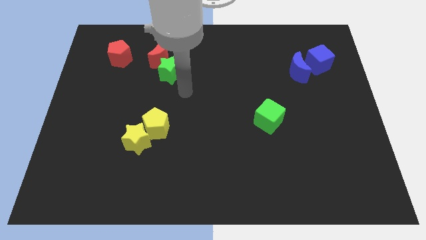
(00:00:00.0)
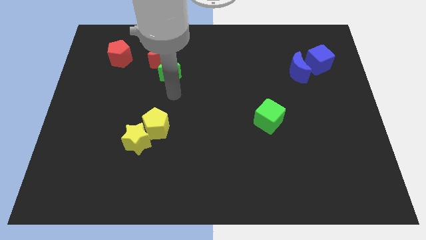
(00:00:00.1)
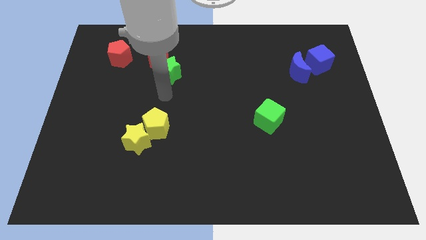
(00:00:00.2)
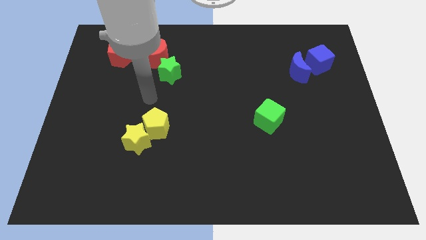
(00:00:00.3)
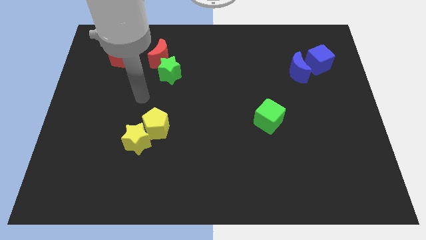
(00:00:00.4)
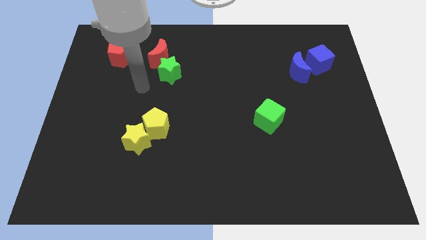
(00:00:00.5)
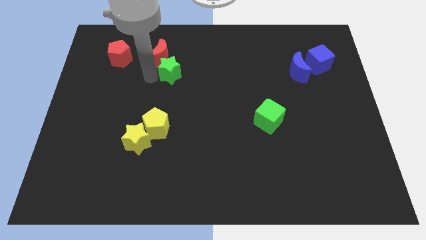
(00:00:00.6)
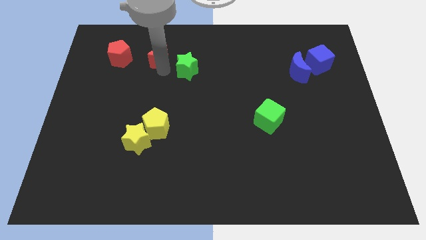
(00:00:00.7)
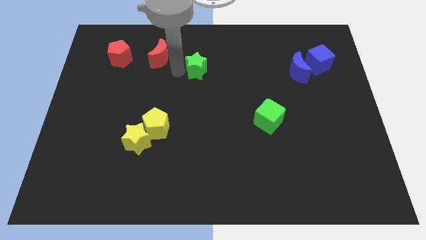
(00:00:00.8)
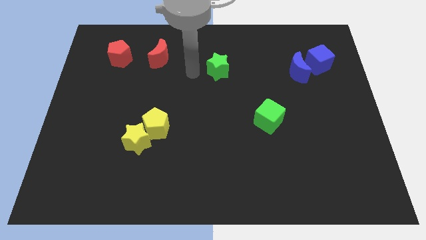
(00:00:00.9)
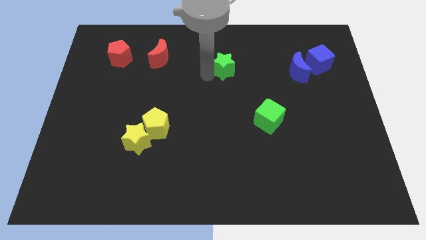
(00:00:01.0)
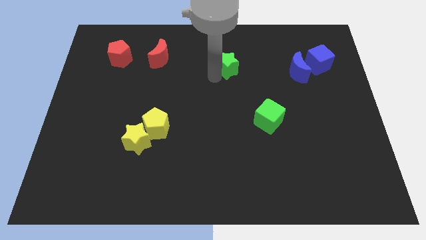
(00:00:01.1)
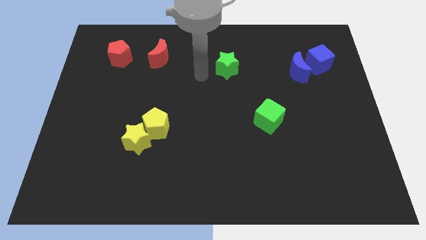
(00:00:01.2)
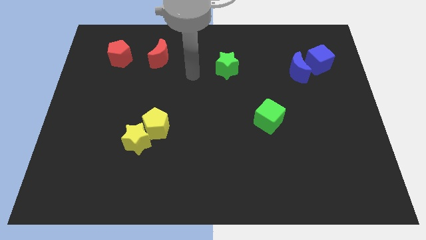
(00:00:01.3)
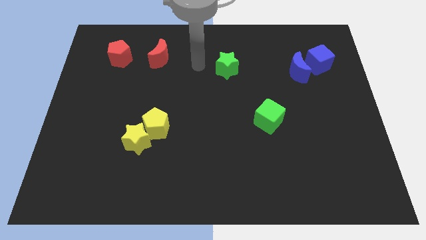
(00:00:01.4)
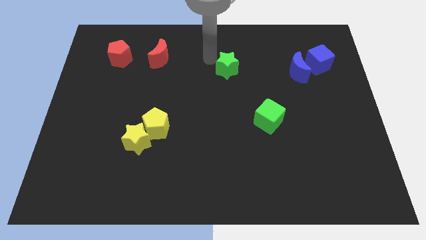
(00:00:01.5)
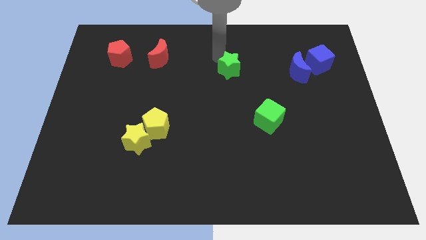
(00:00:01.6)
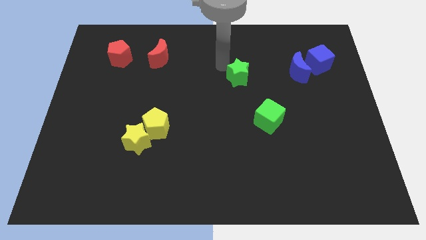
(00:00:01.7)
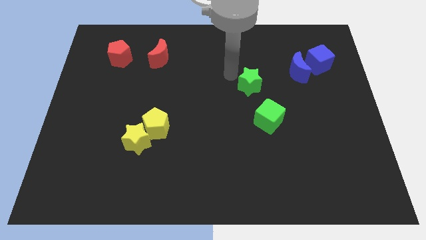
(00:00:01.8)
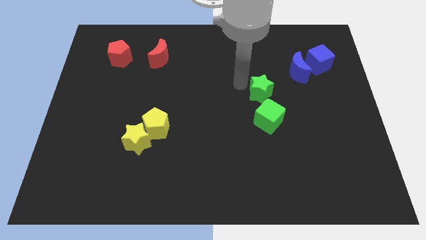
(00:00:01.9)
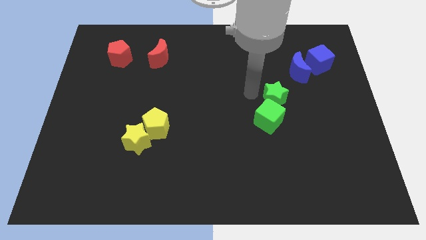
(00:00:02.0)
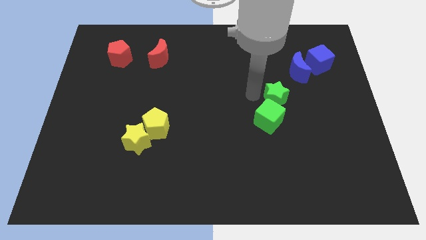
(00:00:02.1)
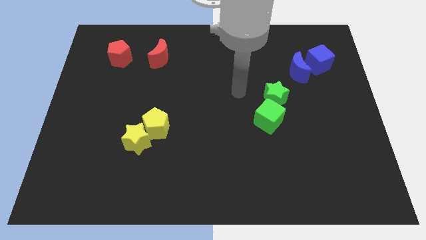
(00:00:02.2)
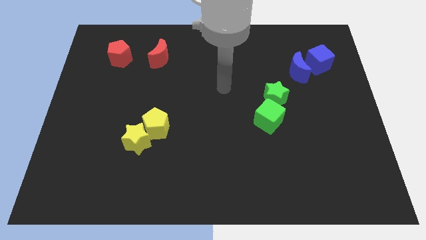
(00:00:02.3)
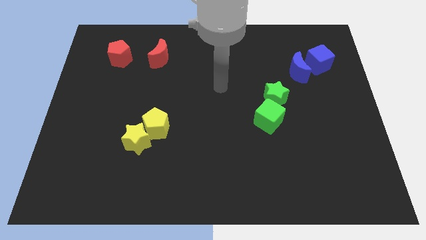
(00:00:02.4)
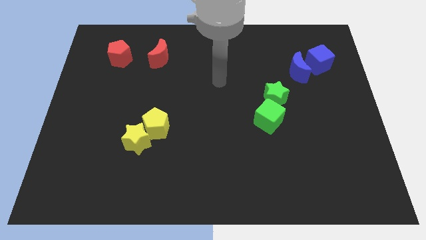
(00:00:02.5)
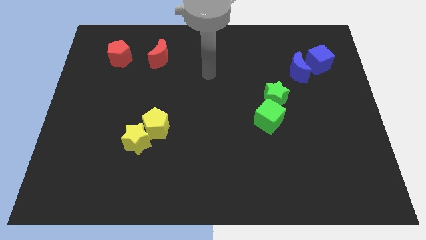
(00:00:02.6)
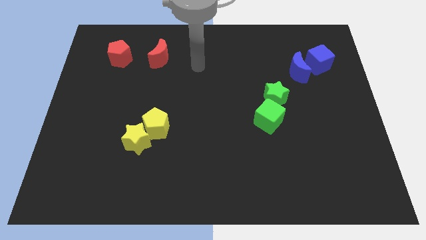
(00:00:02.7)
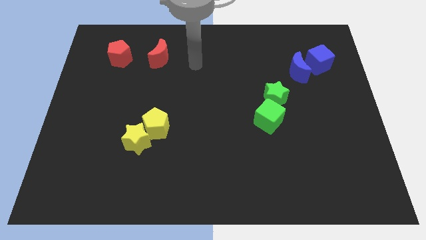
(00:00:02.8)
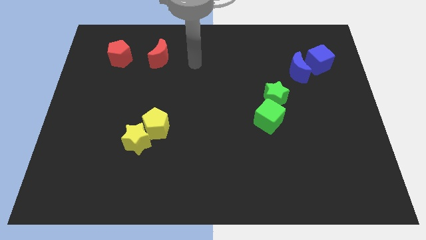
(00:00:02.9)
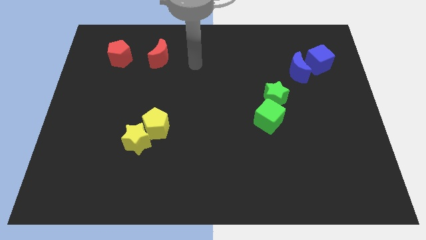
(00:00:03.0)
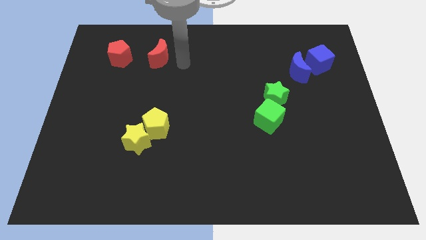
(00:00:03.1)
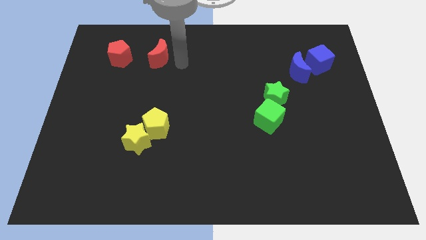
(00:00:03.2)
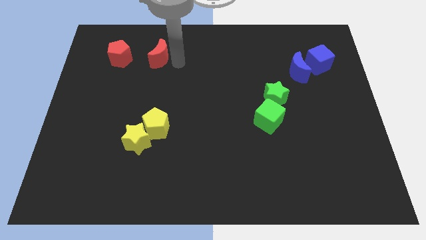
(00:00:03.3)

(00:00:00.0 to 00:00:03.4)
place the green star at the top right side to the green cube

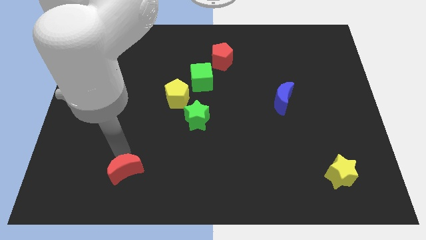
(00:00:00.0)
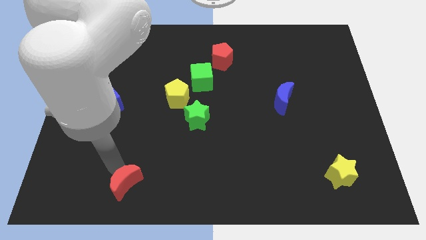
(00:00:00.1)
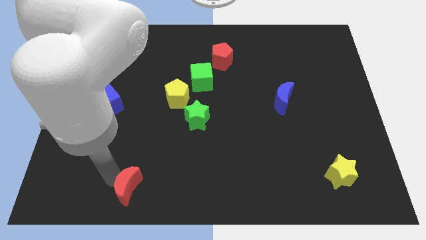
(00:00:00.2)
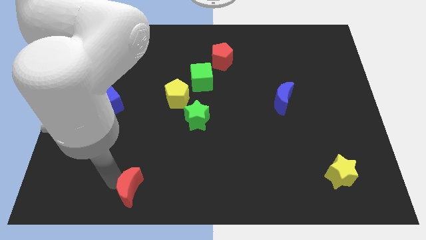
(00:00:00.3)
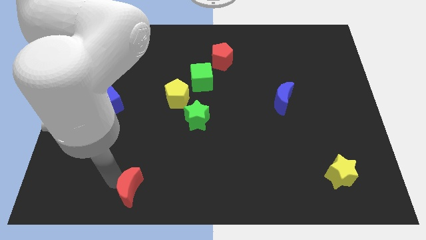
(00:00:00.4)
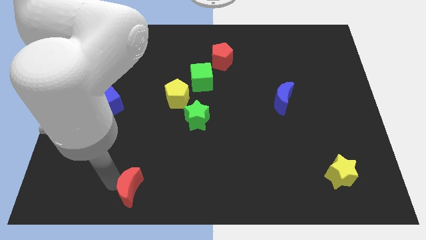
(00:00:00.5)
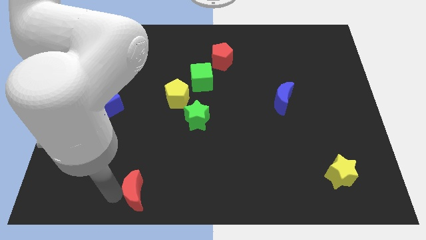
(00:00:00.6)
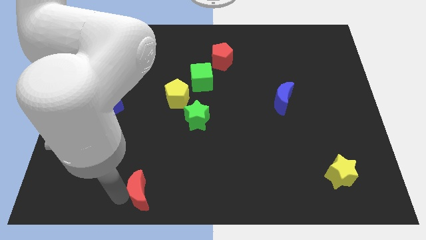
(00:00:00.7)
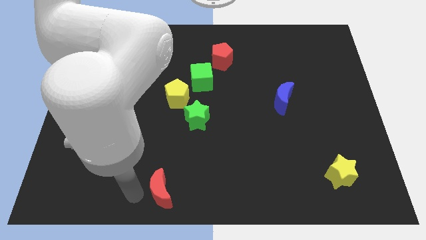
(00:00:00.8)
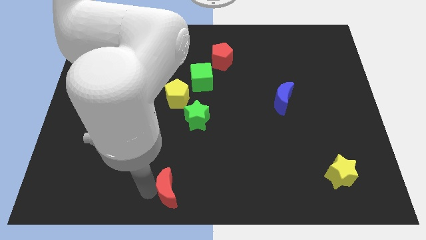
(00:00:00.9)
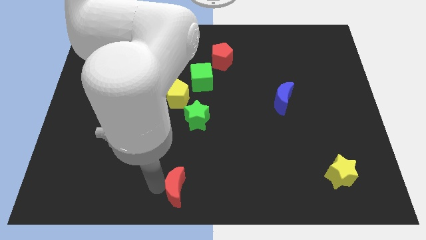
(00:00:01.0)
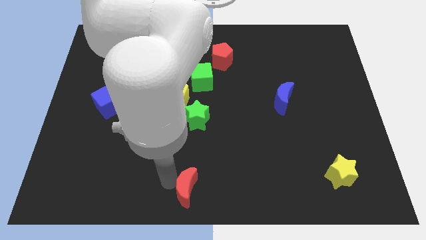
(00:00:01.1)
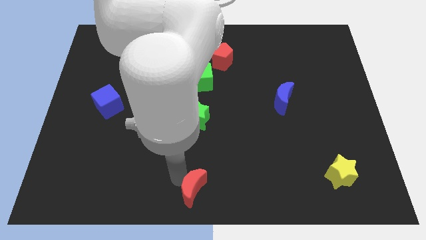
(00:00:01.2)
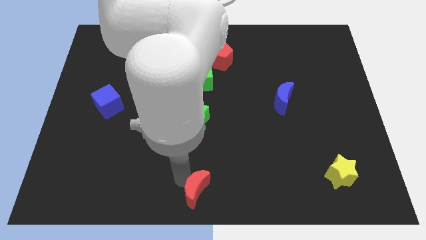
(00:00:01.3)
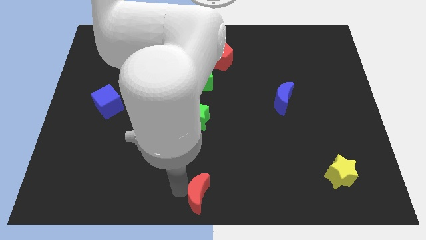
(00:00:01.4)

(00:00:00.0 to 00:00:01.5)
place the red moon below the green star

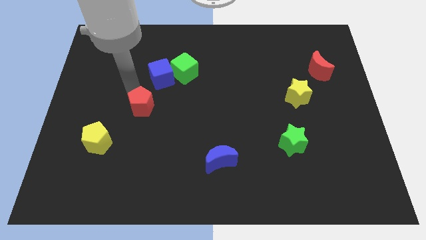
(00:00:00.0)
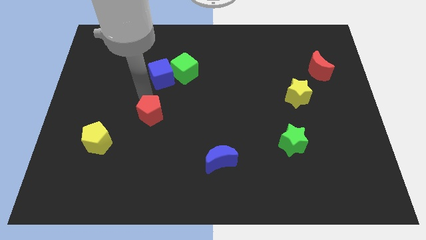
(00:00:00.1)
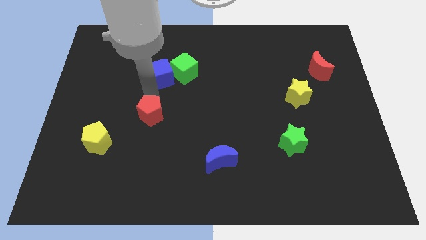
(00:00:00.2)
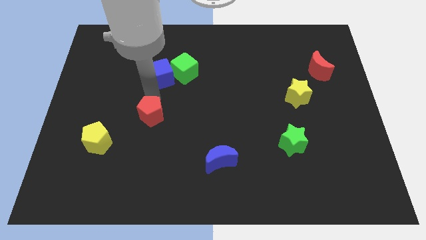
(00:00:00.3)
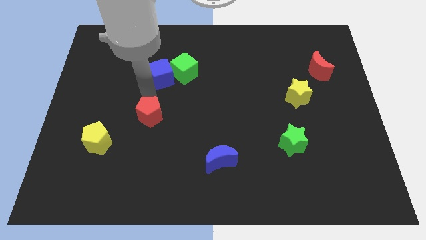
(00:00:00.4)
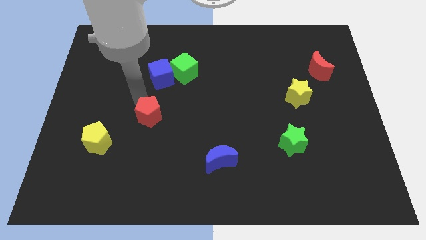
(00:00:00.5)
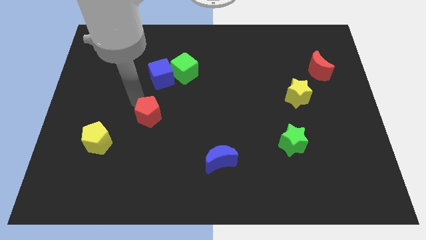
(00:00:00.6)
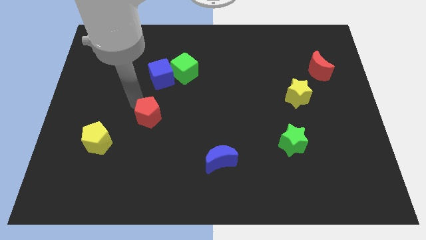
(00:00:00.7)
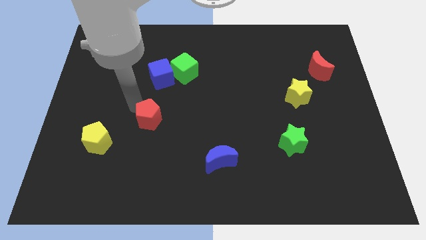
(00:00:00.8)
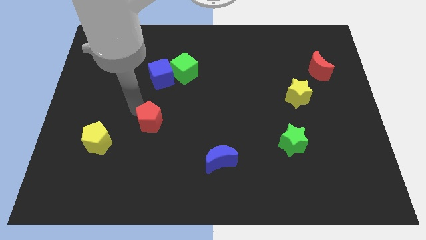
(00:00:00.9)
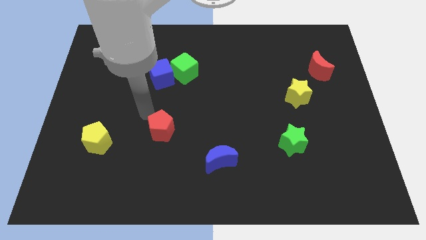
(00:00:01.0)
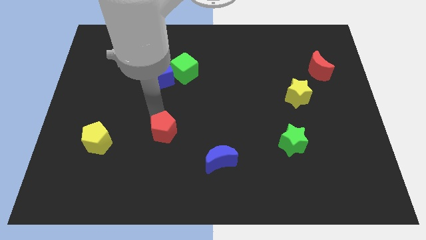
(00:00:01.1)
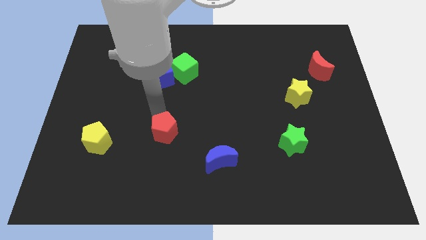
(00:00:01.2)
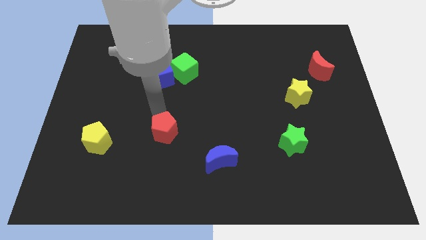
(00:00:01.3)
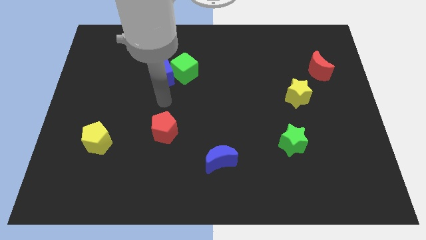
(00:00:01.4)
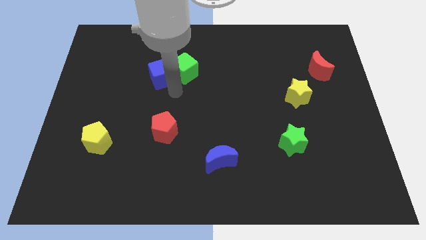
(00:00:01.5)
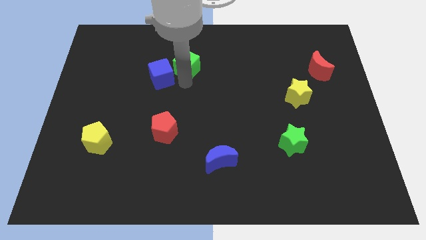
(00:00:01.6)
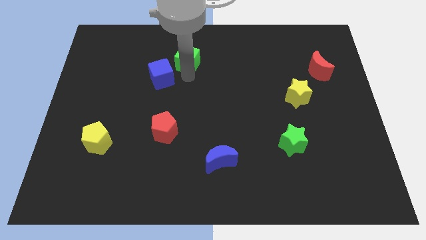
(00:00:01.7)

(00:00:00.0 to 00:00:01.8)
push the red pentagon towards the bottom center

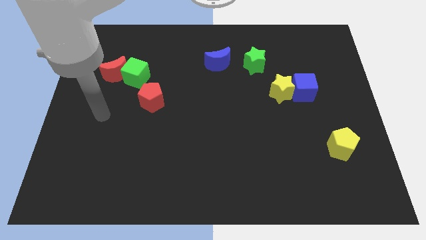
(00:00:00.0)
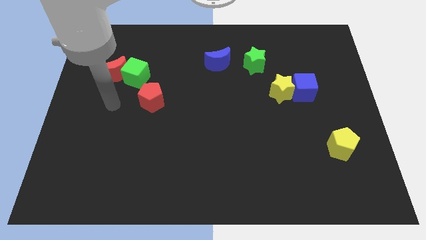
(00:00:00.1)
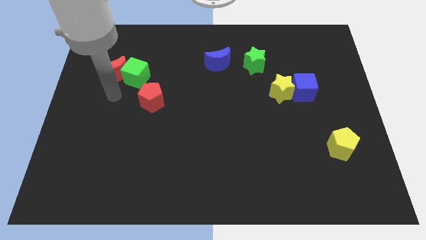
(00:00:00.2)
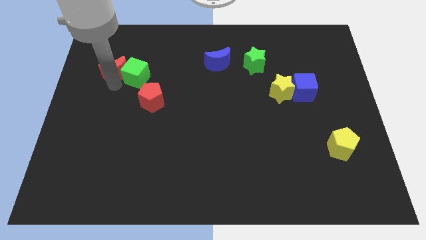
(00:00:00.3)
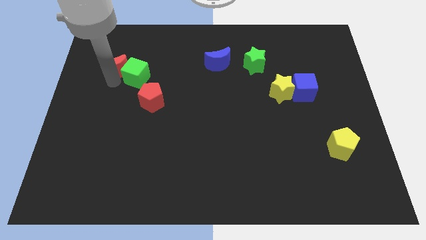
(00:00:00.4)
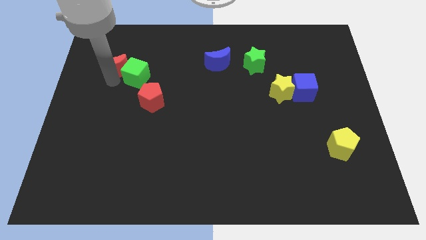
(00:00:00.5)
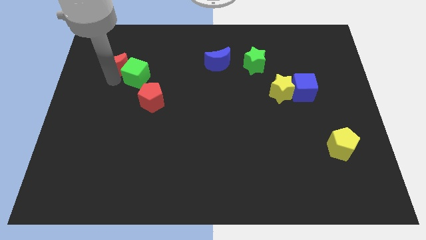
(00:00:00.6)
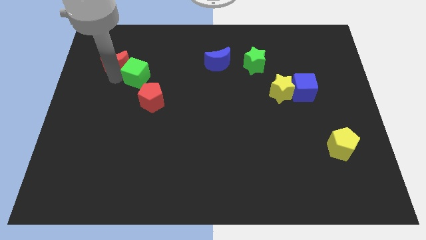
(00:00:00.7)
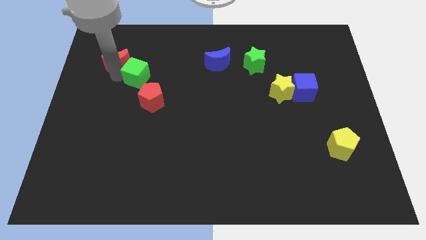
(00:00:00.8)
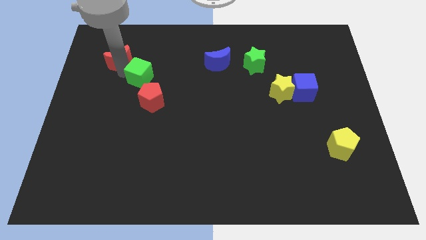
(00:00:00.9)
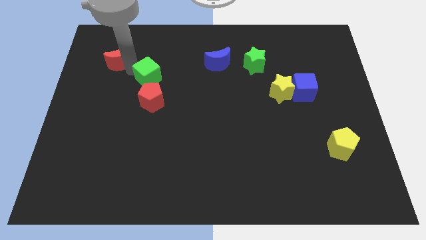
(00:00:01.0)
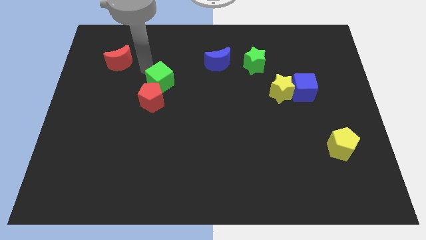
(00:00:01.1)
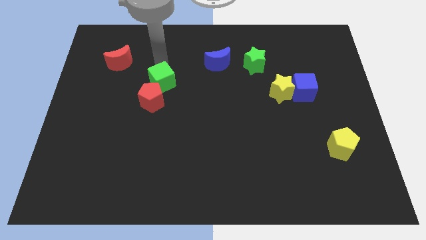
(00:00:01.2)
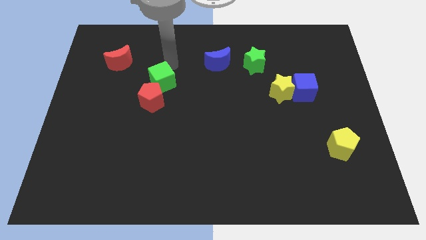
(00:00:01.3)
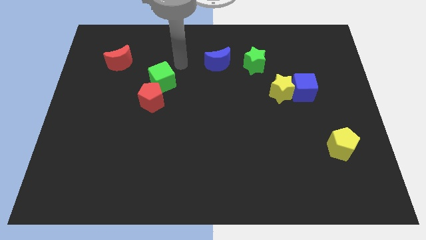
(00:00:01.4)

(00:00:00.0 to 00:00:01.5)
separate the green cube and red moon

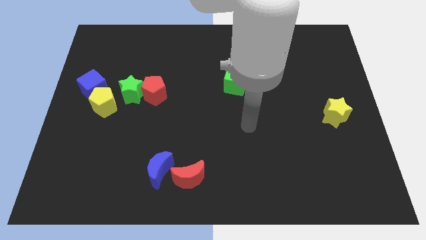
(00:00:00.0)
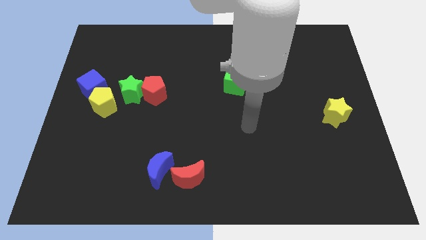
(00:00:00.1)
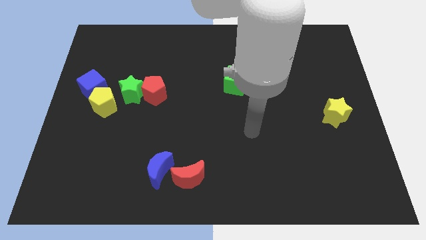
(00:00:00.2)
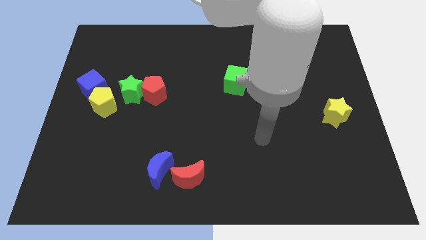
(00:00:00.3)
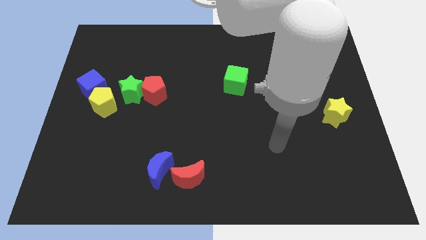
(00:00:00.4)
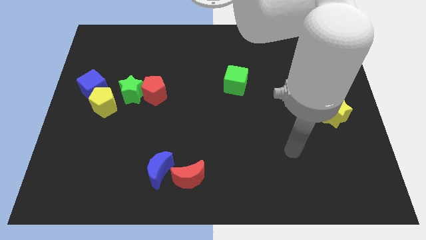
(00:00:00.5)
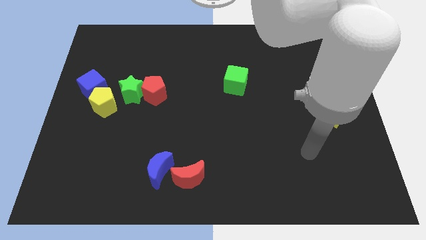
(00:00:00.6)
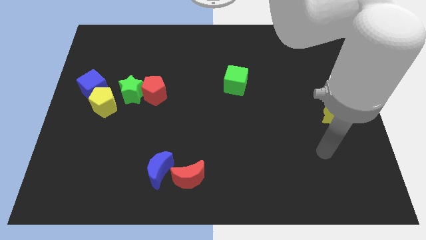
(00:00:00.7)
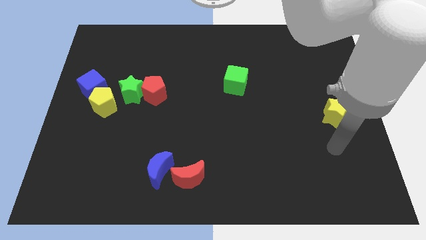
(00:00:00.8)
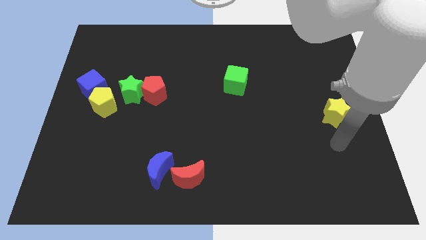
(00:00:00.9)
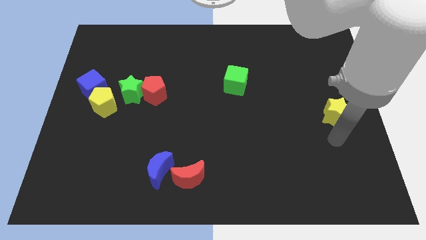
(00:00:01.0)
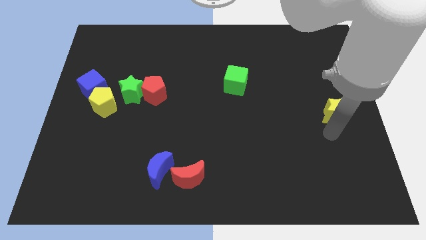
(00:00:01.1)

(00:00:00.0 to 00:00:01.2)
point your arm at the bottom side of the yellow star
